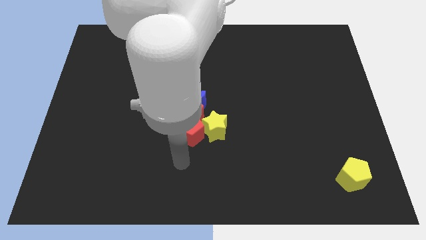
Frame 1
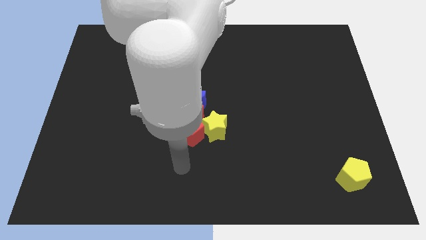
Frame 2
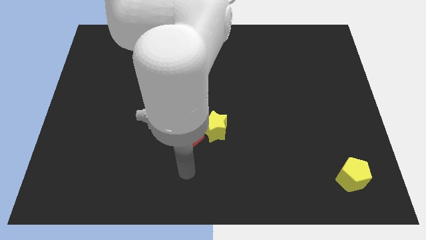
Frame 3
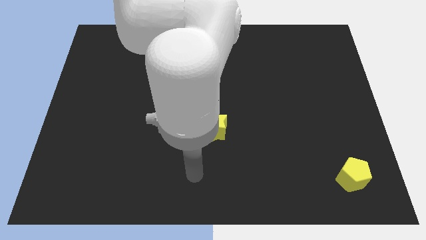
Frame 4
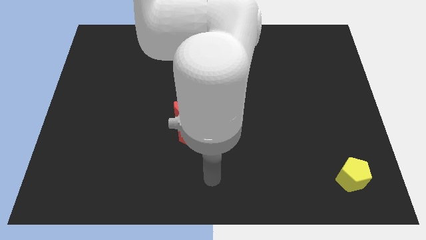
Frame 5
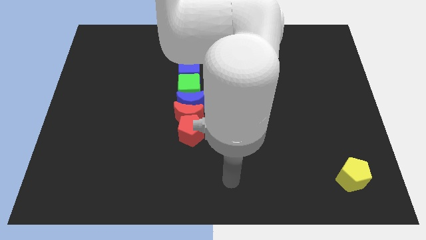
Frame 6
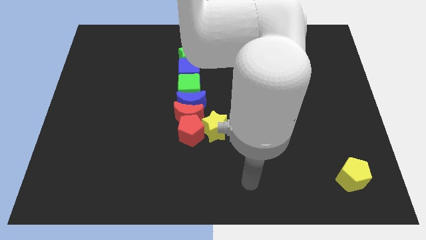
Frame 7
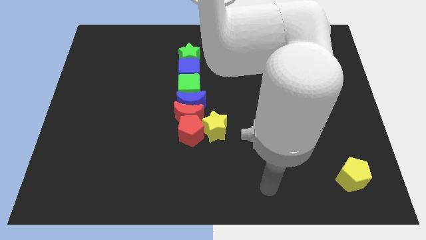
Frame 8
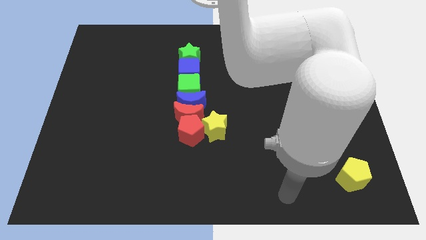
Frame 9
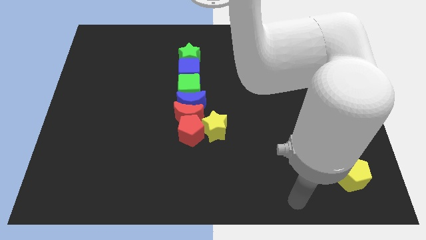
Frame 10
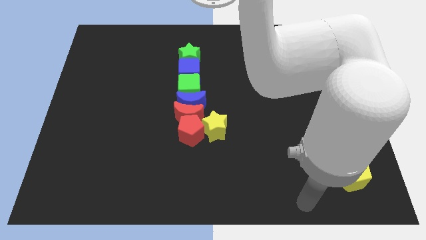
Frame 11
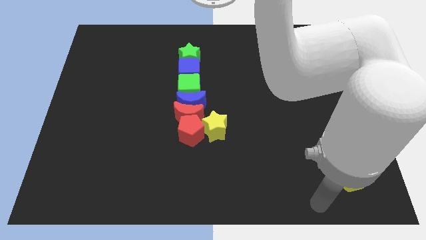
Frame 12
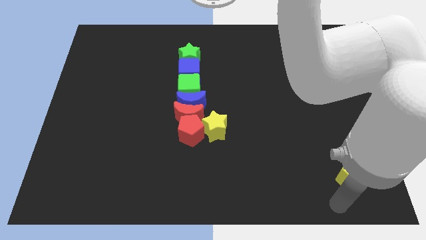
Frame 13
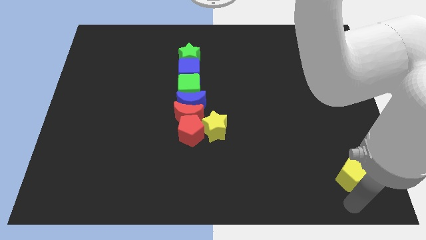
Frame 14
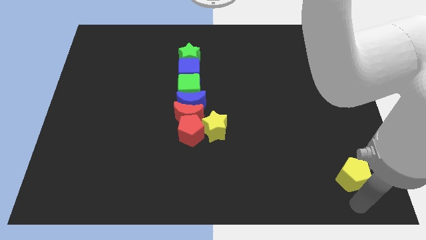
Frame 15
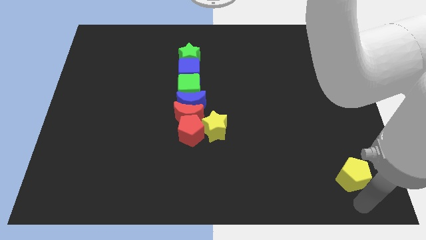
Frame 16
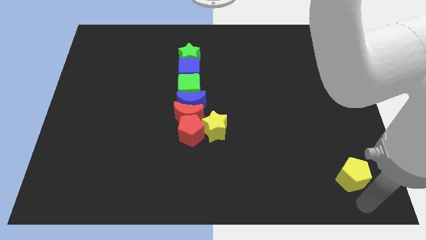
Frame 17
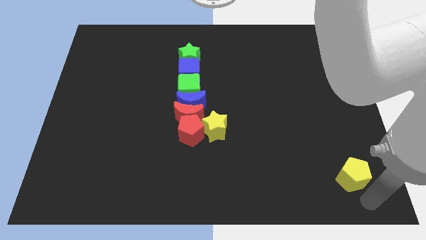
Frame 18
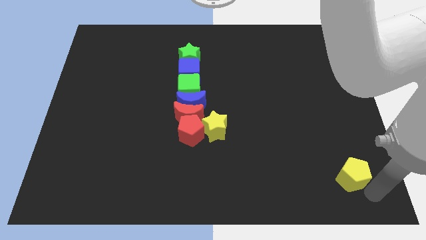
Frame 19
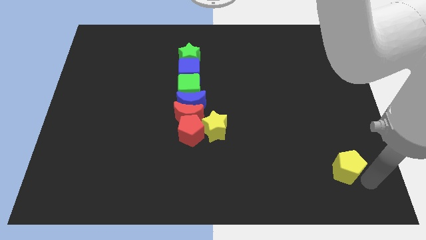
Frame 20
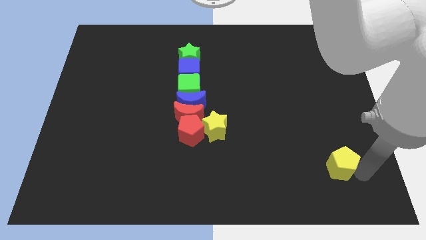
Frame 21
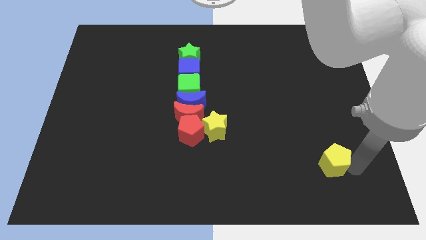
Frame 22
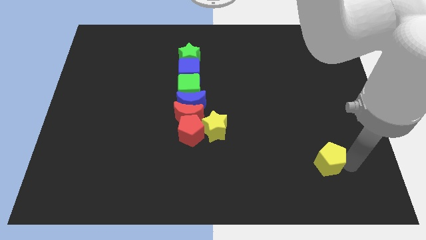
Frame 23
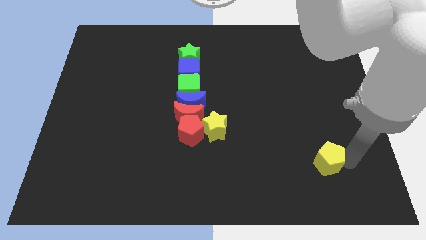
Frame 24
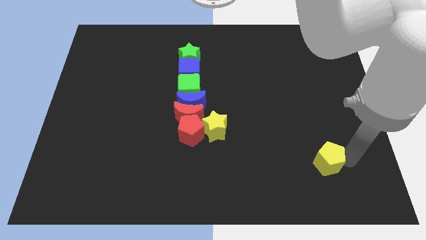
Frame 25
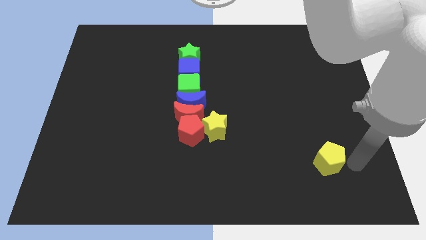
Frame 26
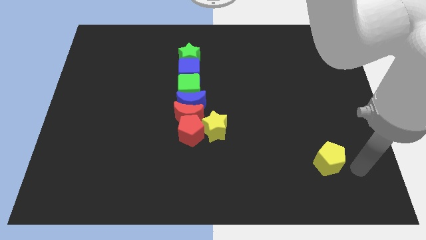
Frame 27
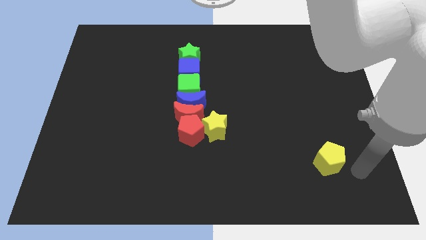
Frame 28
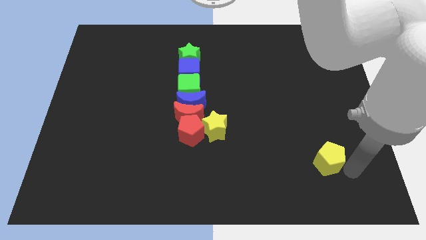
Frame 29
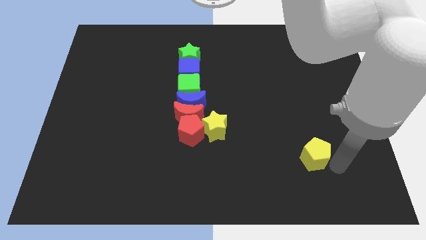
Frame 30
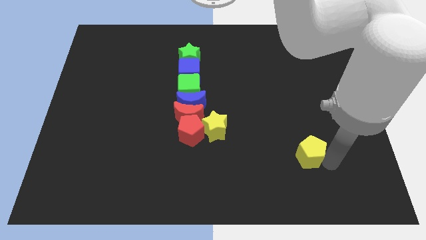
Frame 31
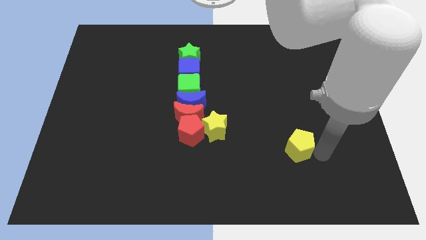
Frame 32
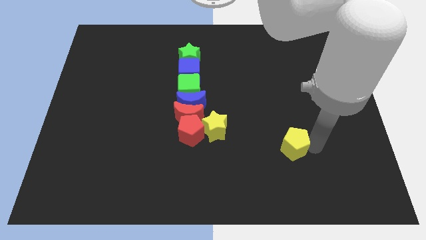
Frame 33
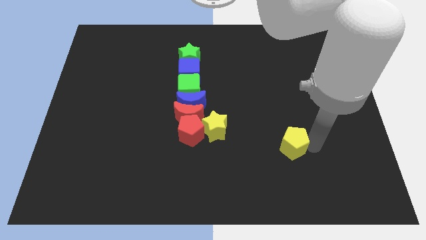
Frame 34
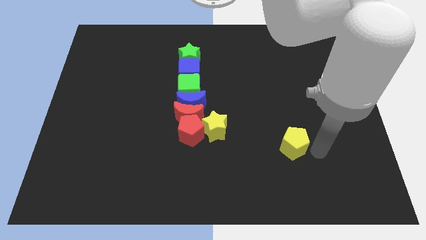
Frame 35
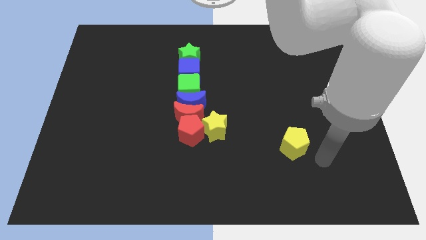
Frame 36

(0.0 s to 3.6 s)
move the yellow pentagon towards the yellow star

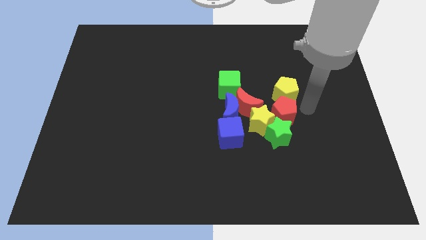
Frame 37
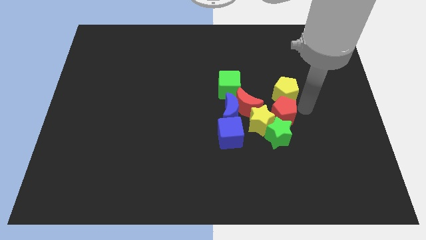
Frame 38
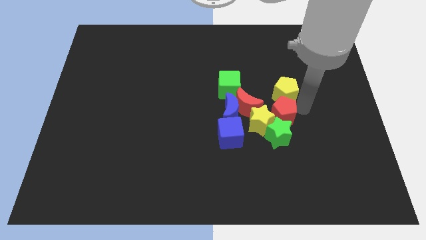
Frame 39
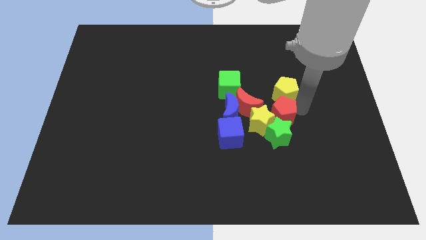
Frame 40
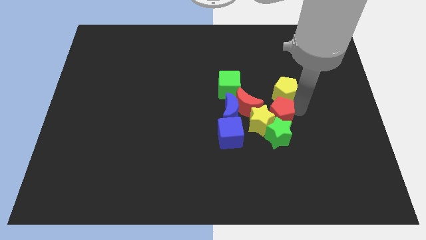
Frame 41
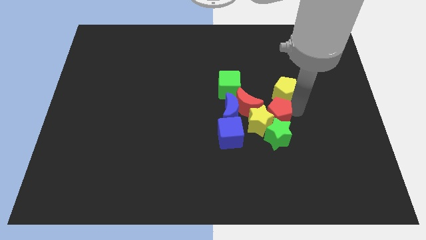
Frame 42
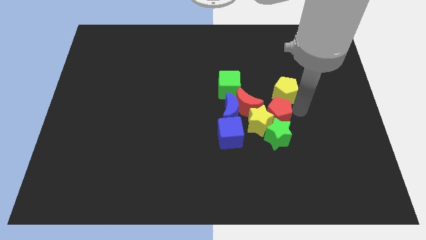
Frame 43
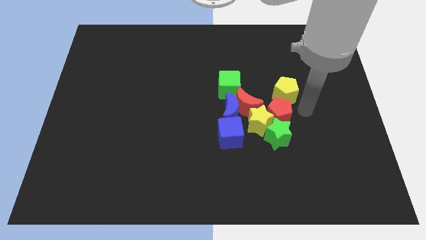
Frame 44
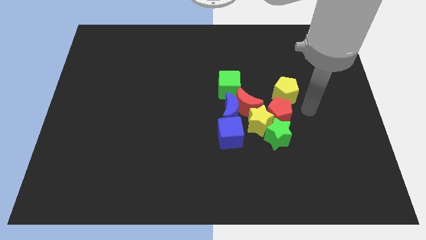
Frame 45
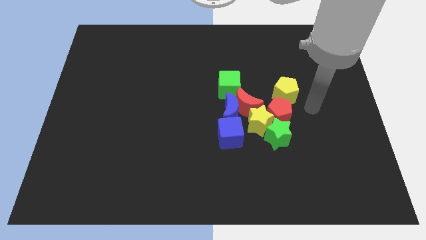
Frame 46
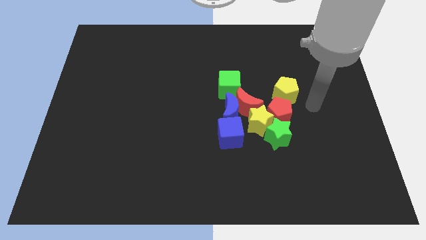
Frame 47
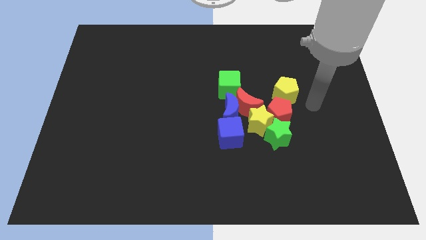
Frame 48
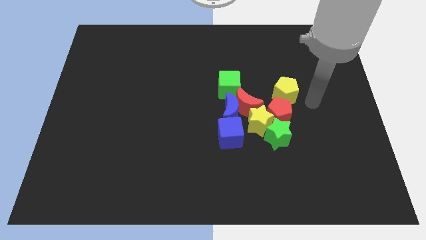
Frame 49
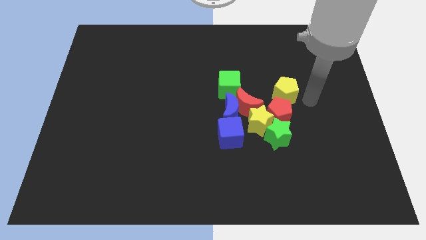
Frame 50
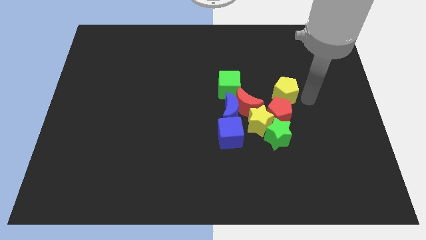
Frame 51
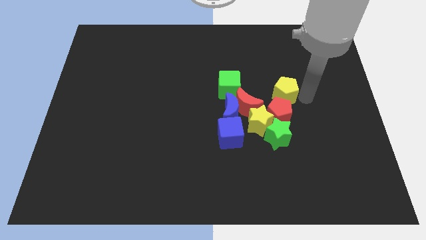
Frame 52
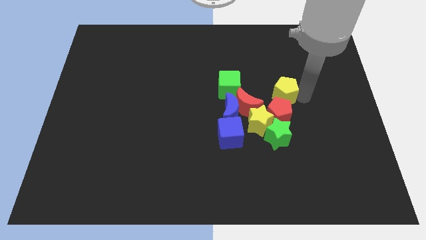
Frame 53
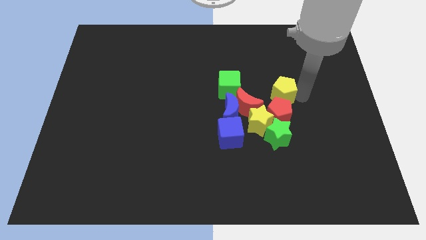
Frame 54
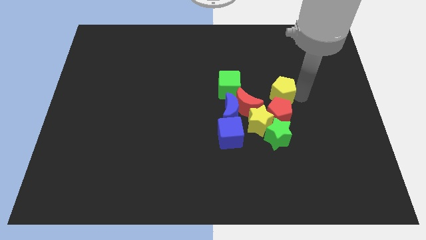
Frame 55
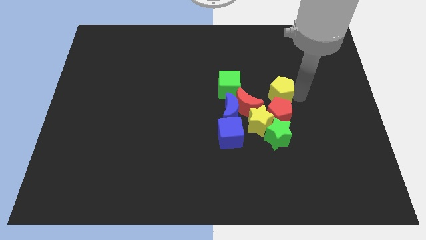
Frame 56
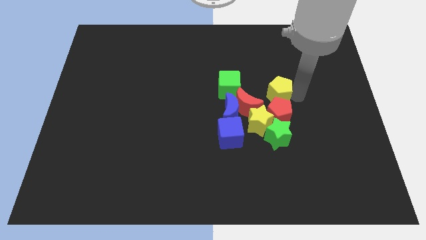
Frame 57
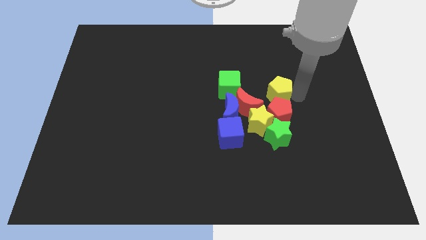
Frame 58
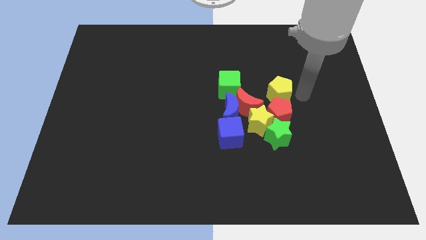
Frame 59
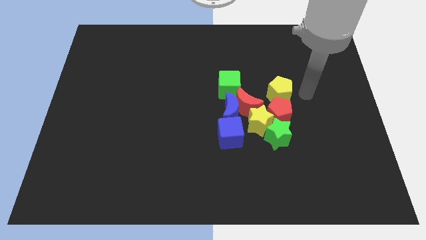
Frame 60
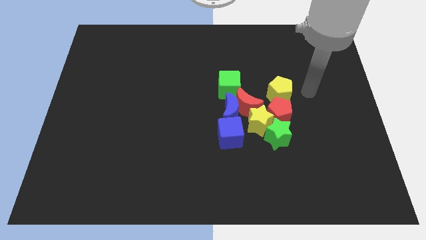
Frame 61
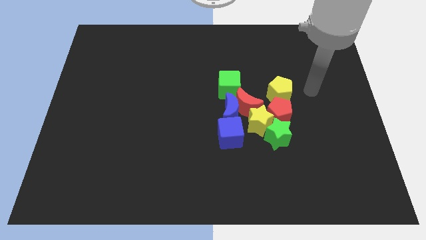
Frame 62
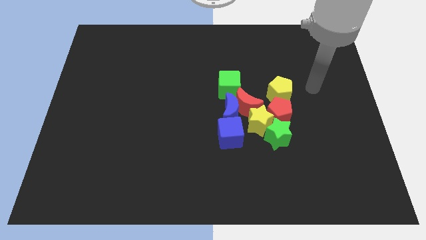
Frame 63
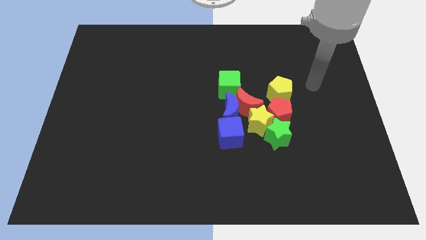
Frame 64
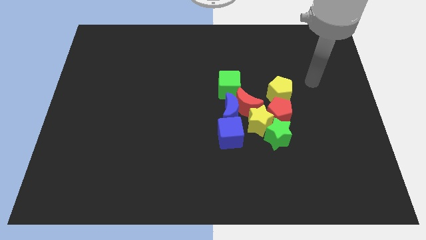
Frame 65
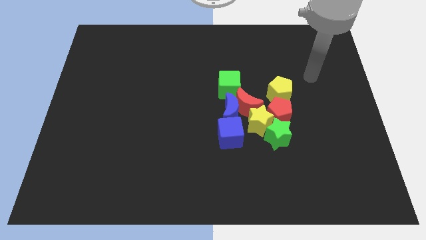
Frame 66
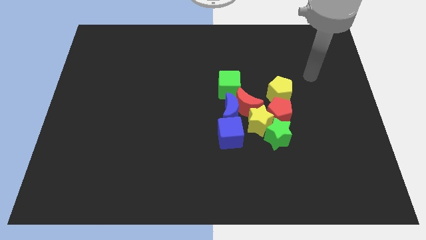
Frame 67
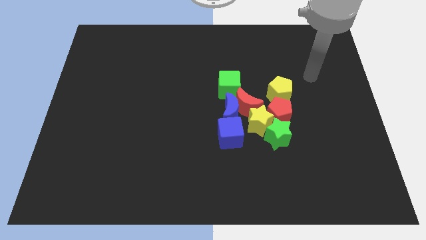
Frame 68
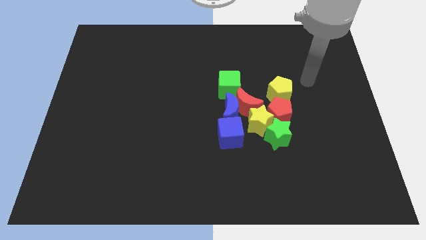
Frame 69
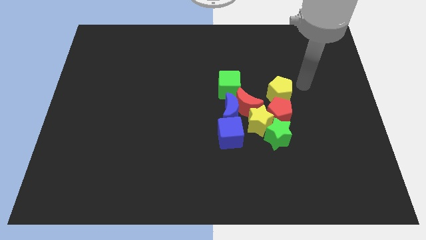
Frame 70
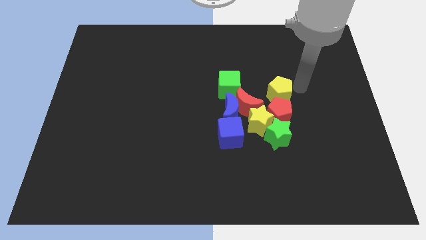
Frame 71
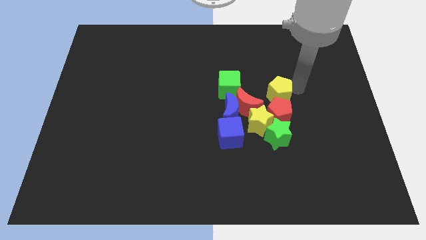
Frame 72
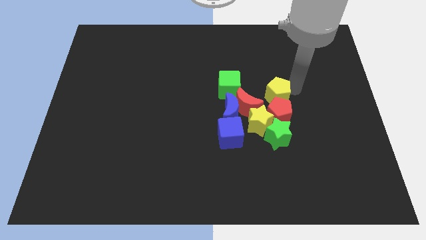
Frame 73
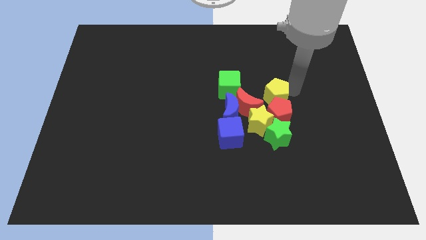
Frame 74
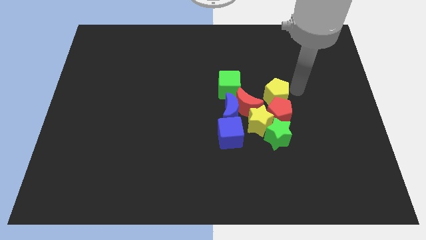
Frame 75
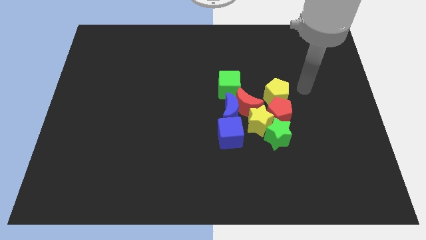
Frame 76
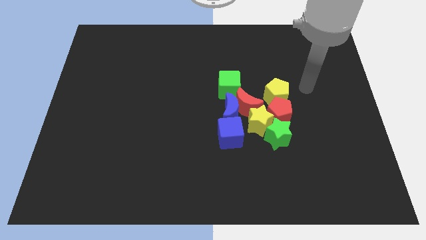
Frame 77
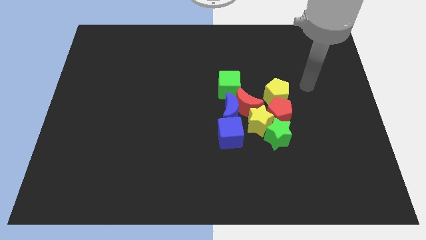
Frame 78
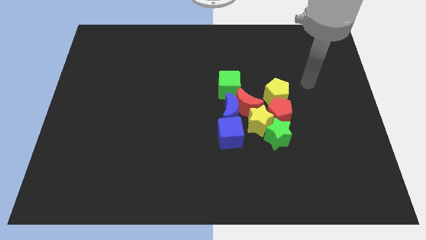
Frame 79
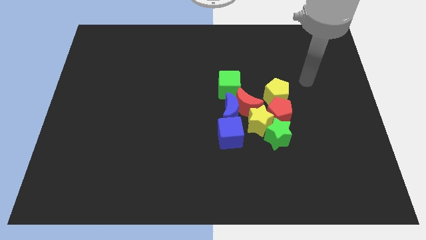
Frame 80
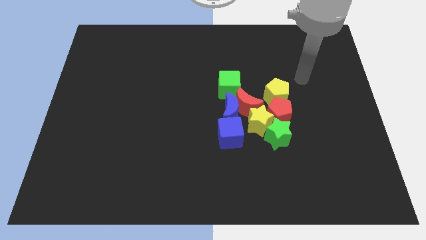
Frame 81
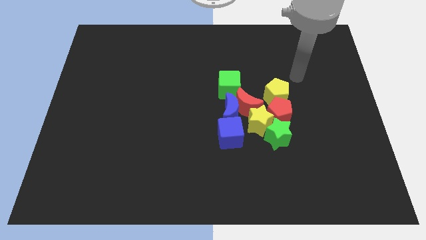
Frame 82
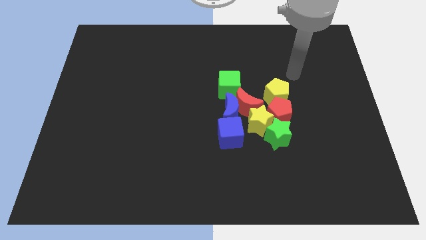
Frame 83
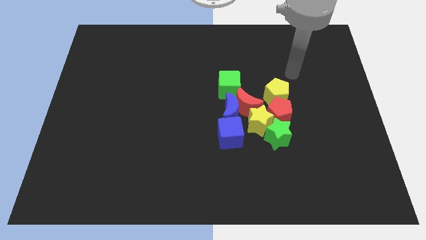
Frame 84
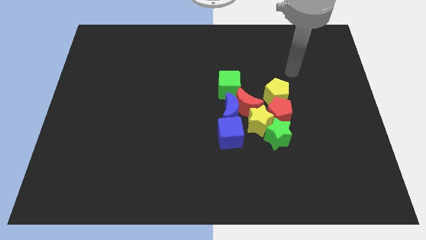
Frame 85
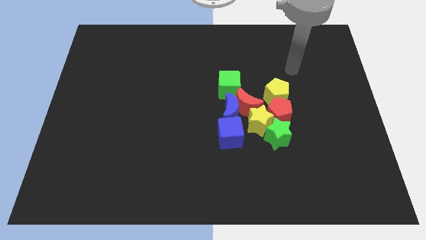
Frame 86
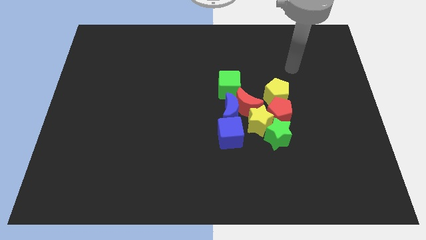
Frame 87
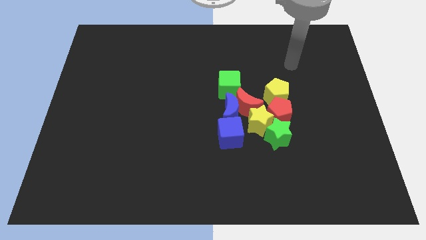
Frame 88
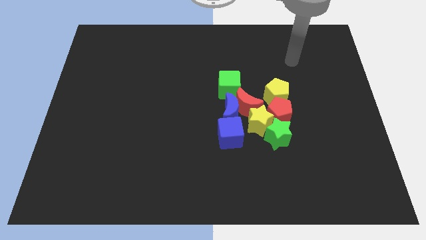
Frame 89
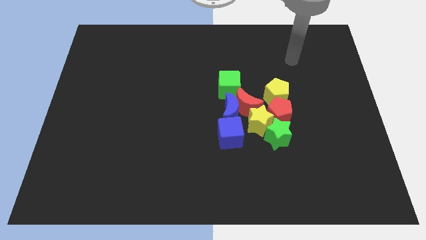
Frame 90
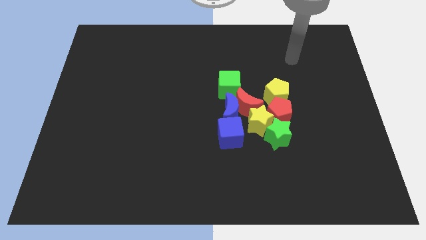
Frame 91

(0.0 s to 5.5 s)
push the yellow and red pentagon into the group of blocks
